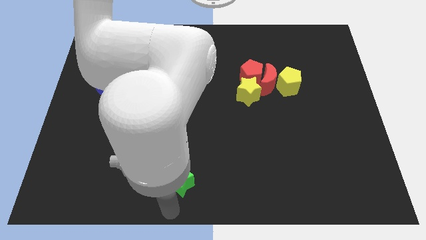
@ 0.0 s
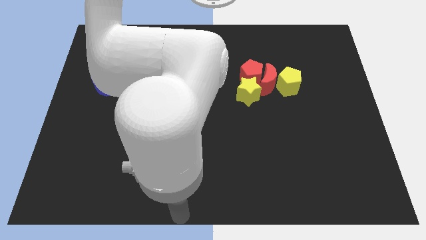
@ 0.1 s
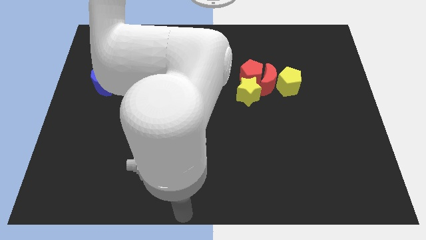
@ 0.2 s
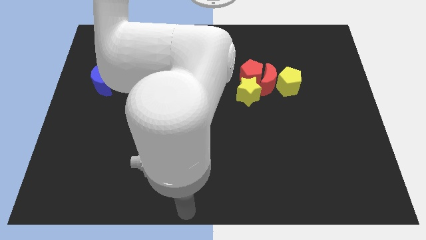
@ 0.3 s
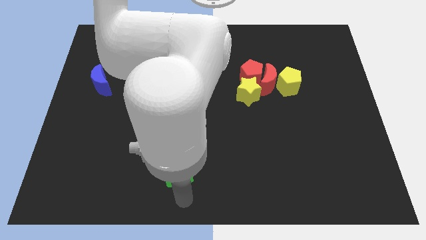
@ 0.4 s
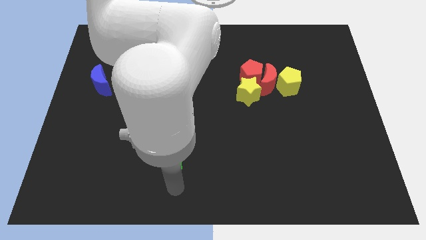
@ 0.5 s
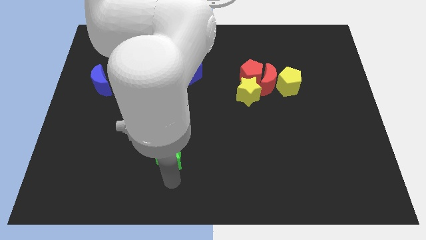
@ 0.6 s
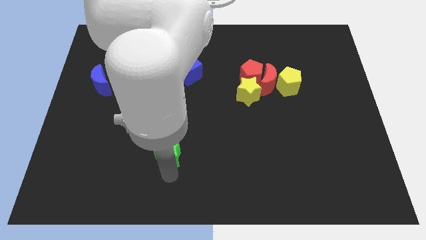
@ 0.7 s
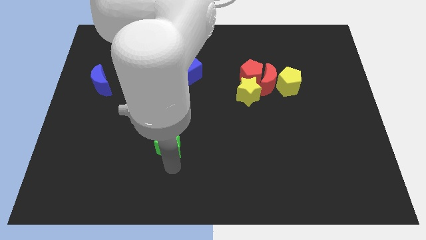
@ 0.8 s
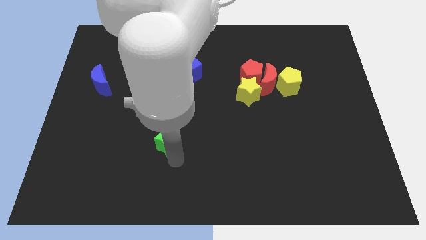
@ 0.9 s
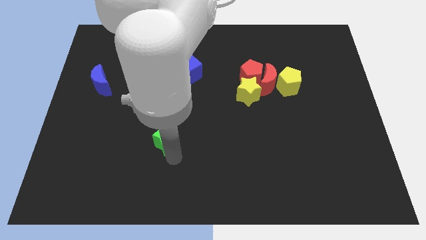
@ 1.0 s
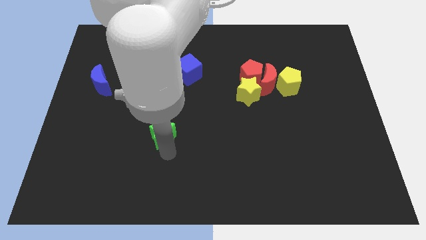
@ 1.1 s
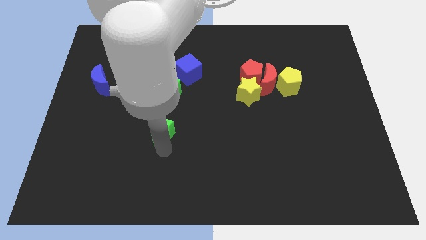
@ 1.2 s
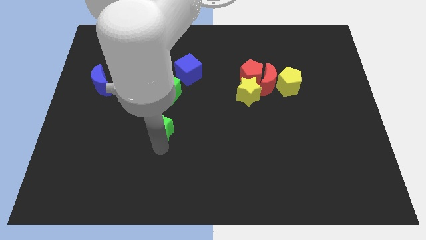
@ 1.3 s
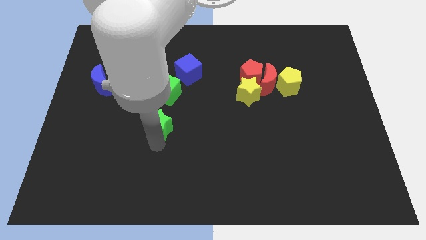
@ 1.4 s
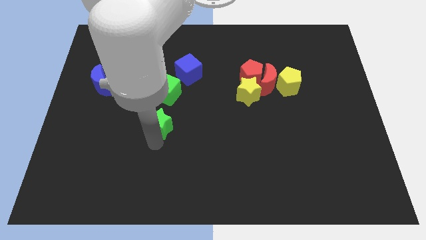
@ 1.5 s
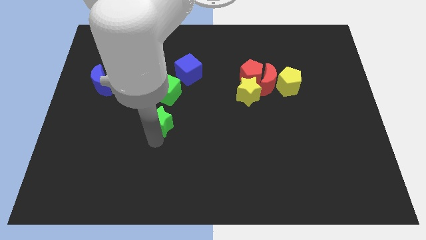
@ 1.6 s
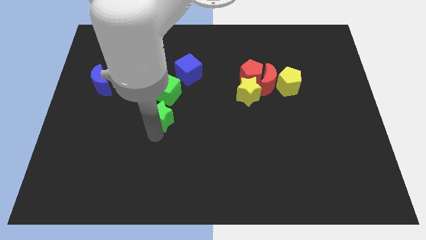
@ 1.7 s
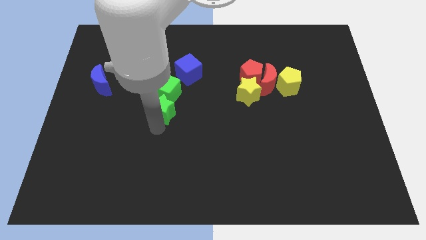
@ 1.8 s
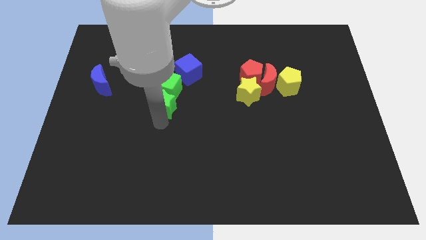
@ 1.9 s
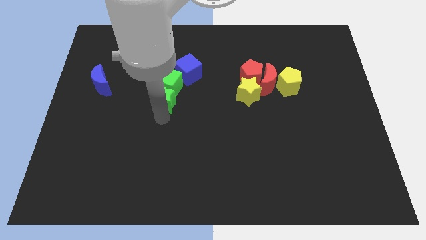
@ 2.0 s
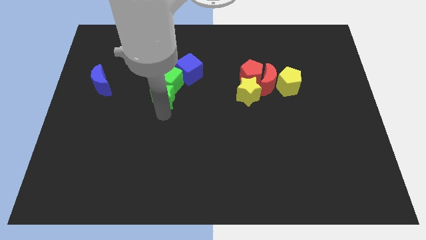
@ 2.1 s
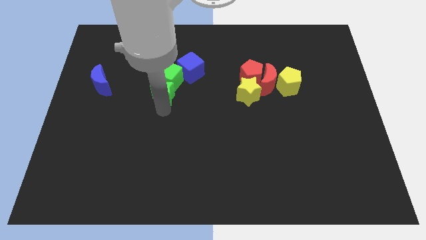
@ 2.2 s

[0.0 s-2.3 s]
mov ethe green star below into the green cube

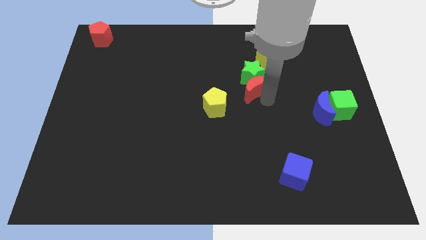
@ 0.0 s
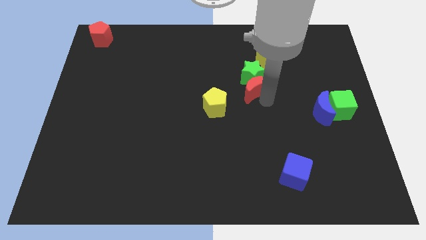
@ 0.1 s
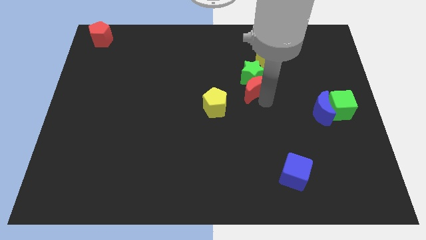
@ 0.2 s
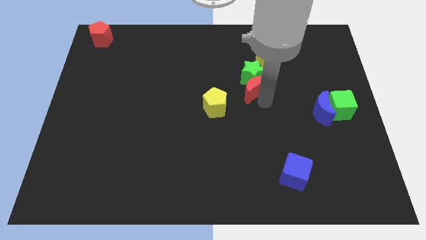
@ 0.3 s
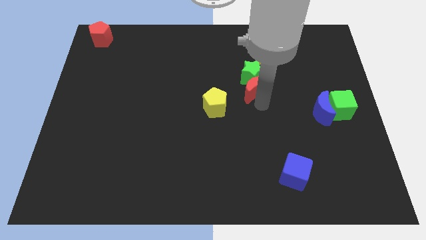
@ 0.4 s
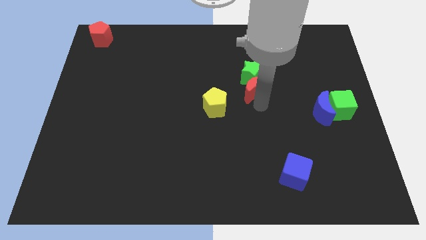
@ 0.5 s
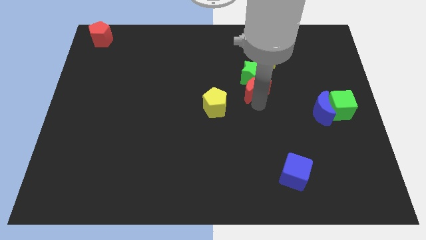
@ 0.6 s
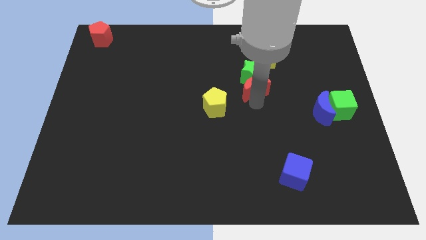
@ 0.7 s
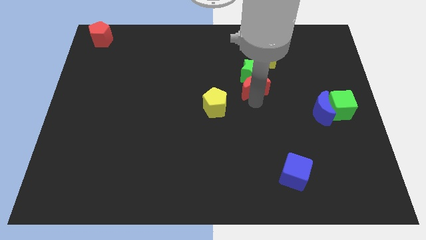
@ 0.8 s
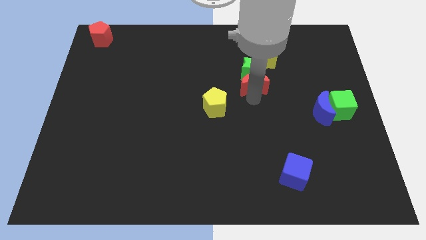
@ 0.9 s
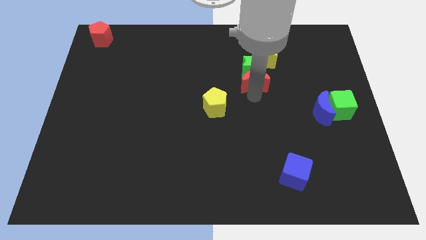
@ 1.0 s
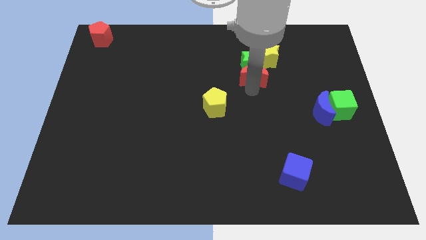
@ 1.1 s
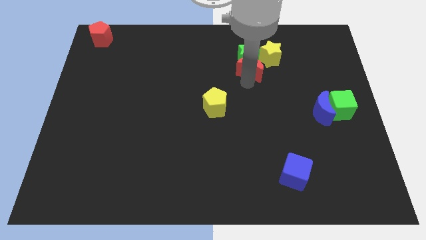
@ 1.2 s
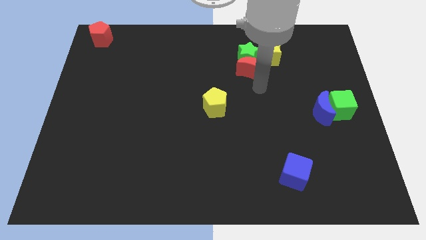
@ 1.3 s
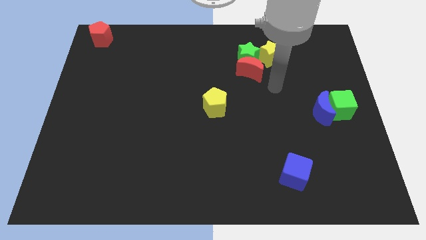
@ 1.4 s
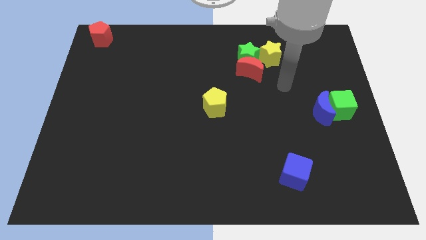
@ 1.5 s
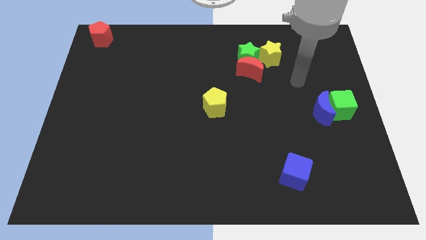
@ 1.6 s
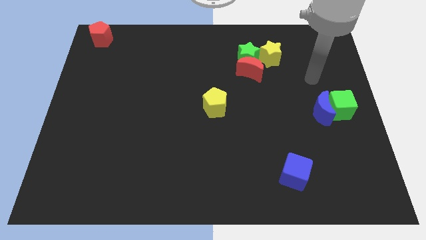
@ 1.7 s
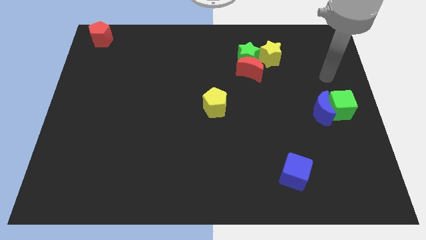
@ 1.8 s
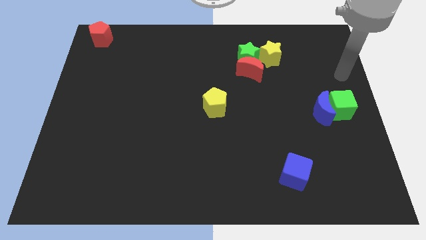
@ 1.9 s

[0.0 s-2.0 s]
push the green star with the red moon towards up

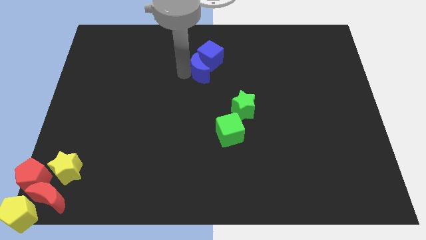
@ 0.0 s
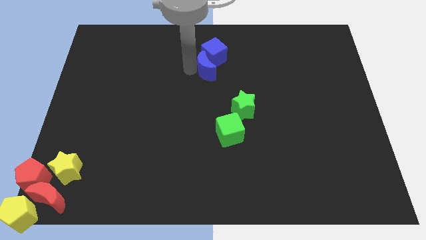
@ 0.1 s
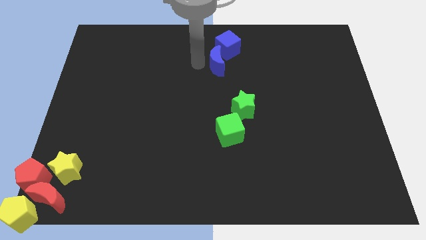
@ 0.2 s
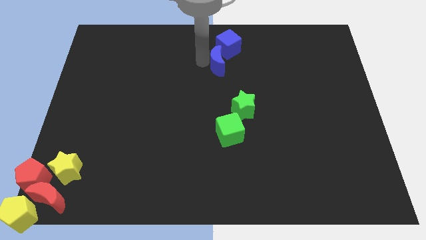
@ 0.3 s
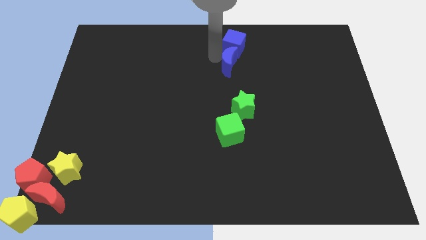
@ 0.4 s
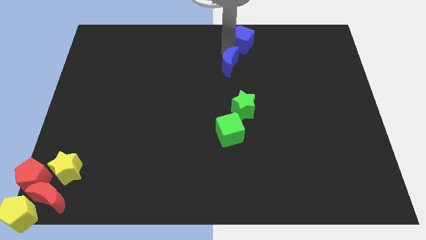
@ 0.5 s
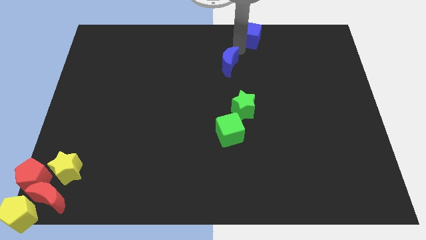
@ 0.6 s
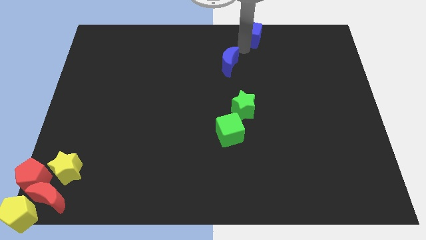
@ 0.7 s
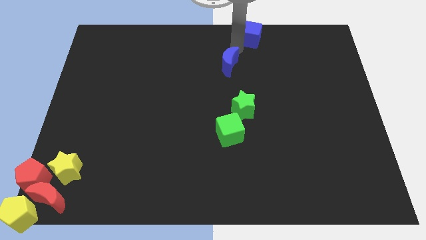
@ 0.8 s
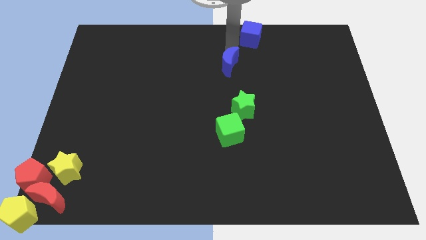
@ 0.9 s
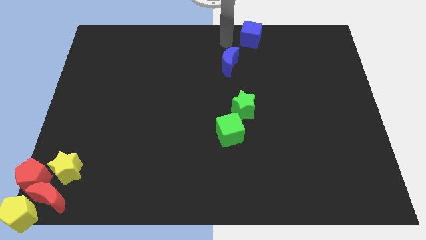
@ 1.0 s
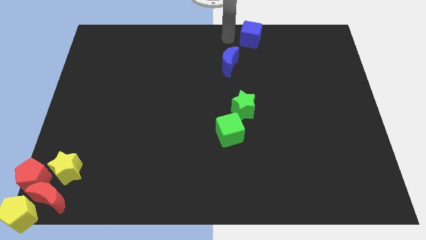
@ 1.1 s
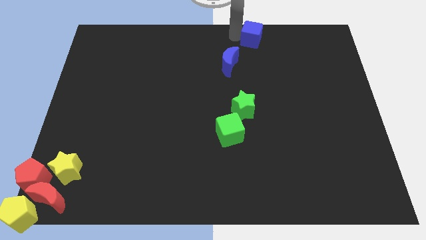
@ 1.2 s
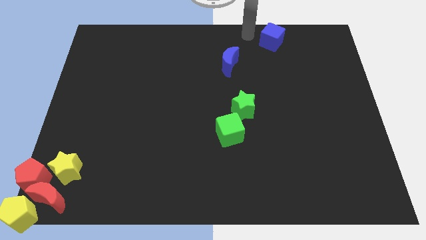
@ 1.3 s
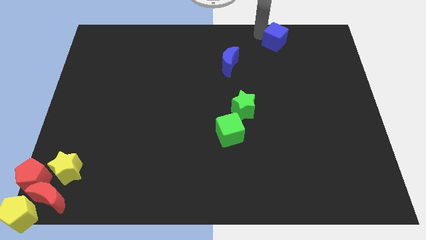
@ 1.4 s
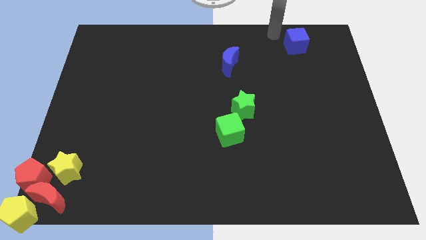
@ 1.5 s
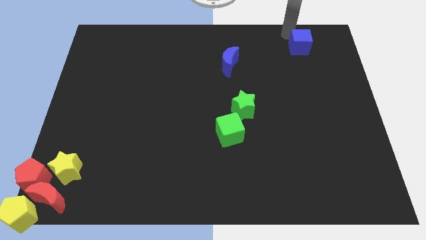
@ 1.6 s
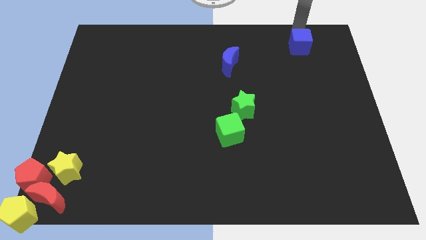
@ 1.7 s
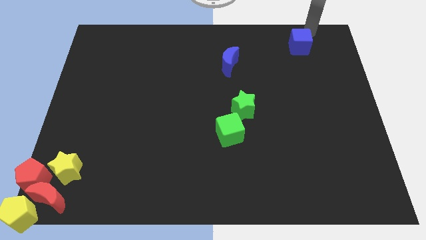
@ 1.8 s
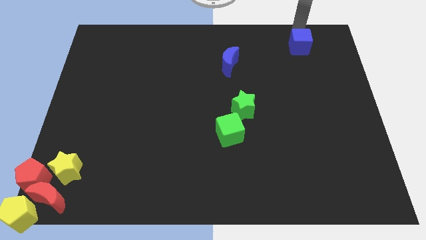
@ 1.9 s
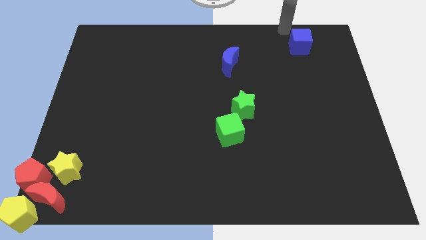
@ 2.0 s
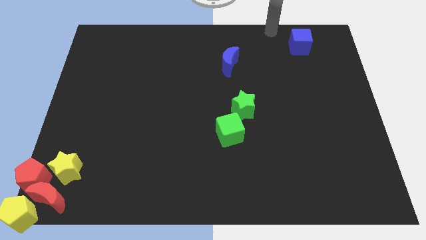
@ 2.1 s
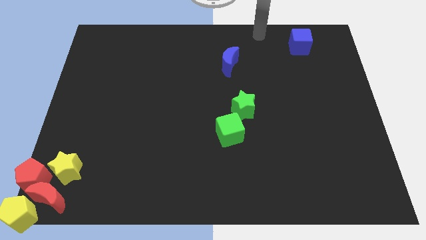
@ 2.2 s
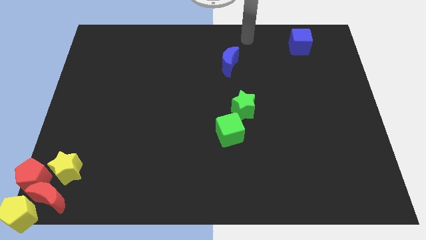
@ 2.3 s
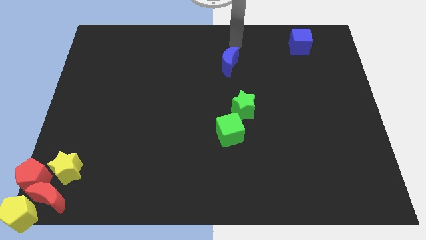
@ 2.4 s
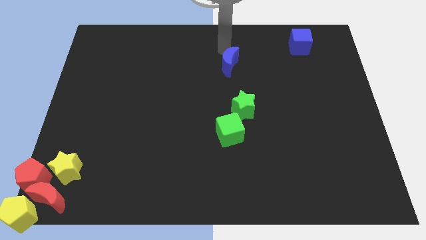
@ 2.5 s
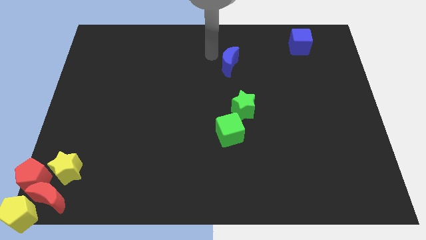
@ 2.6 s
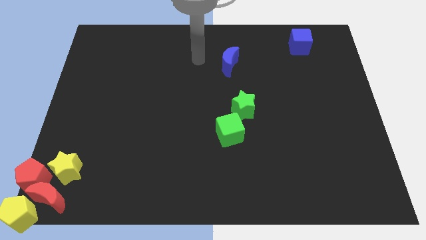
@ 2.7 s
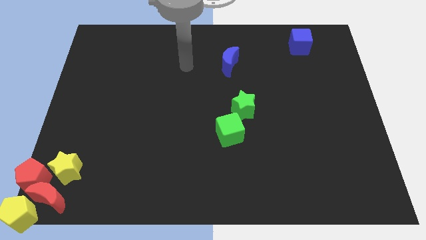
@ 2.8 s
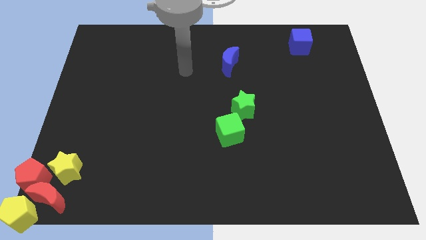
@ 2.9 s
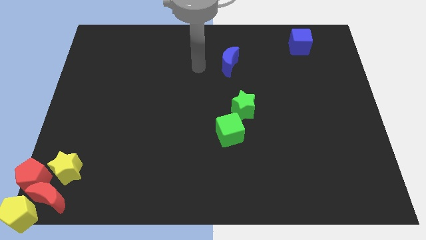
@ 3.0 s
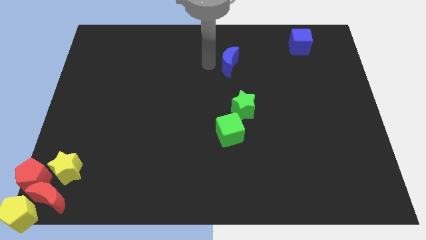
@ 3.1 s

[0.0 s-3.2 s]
push the blue cube towards the top right corner

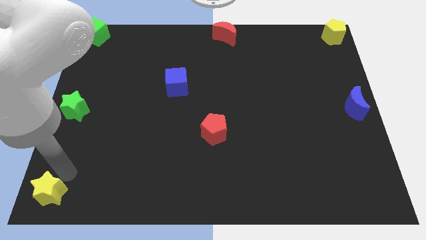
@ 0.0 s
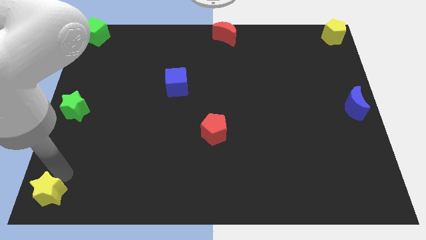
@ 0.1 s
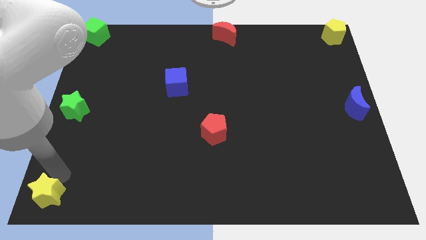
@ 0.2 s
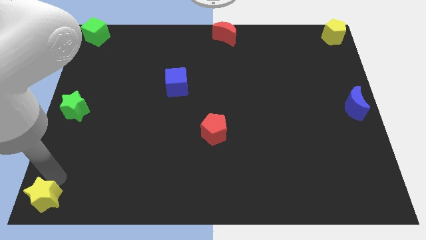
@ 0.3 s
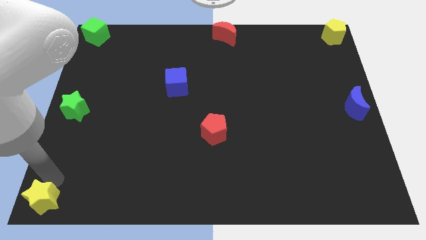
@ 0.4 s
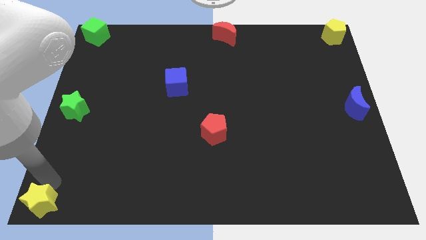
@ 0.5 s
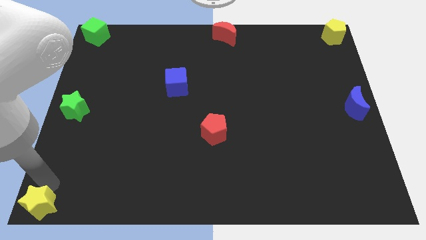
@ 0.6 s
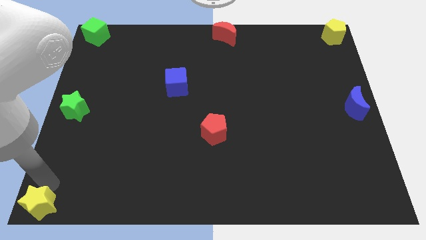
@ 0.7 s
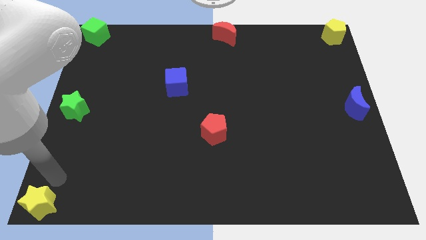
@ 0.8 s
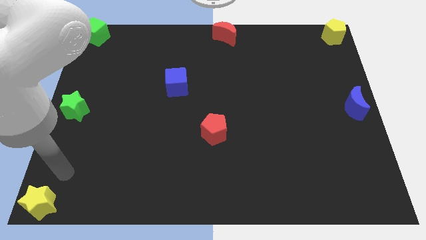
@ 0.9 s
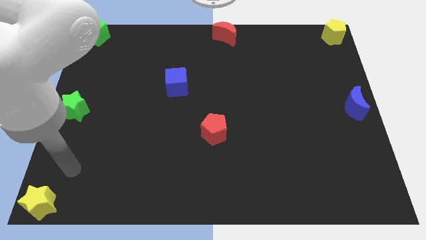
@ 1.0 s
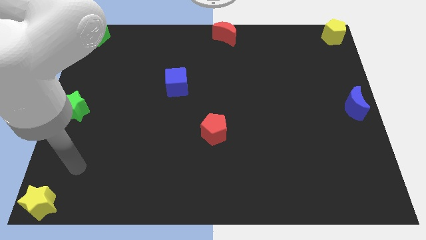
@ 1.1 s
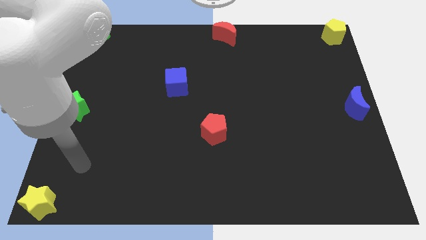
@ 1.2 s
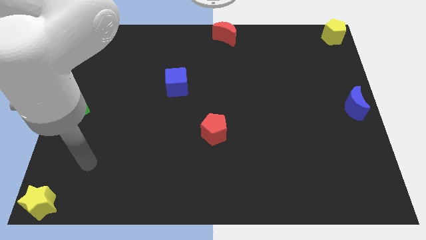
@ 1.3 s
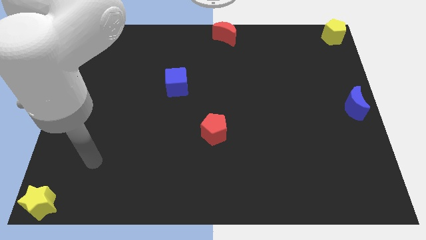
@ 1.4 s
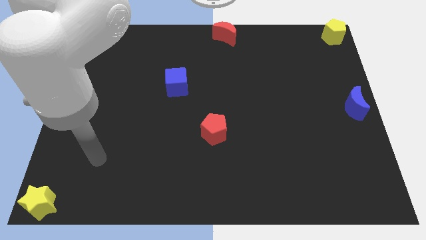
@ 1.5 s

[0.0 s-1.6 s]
push the yellow star to the bottom left corner of the board
